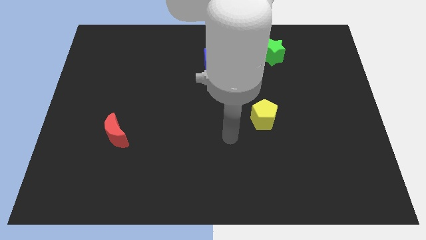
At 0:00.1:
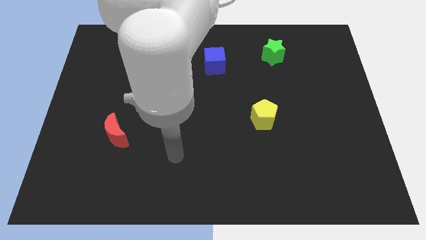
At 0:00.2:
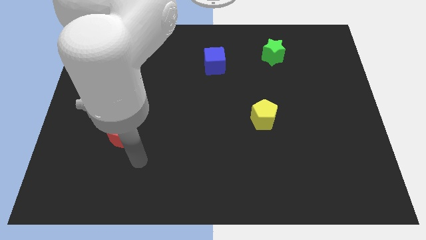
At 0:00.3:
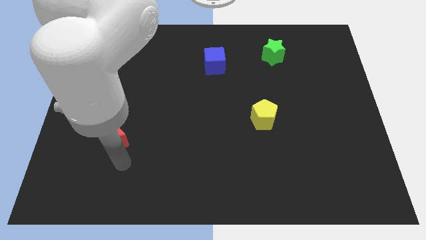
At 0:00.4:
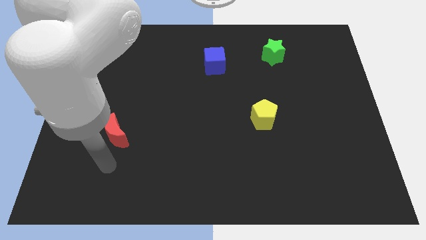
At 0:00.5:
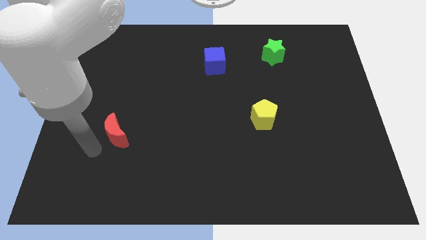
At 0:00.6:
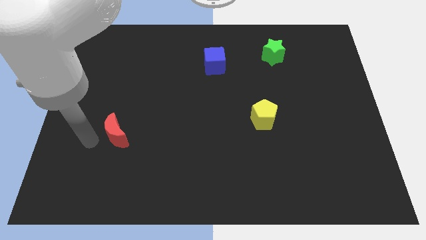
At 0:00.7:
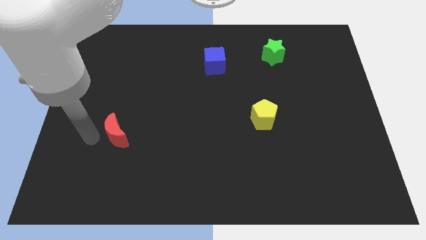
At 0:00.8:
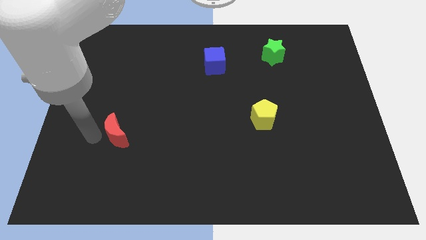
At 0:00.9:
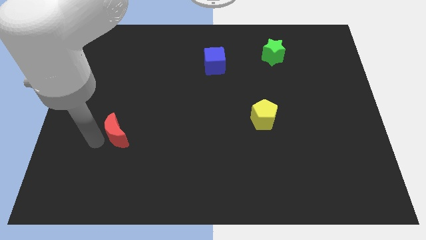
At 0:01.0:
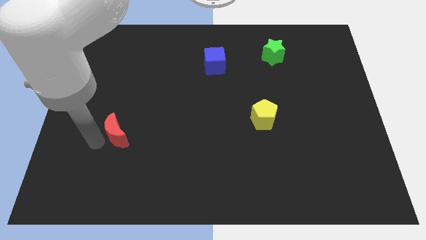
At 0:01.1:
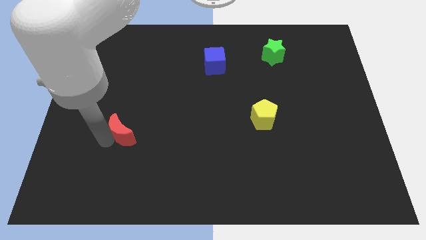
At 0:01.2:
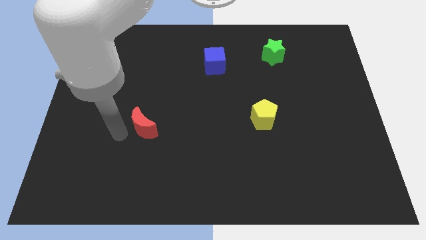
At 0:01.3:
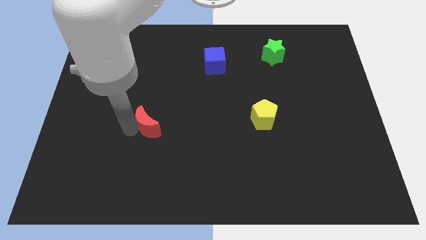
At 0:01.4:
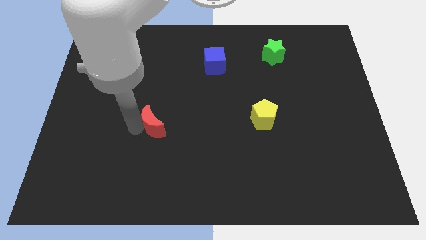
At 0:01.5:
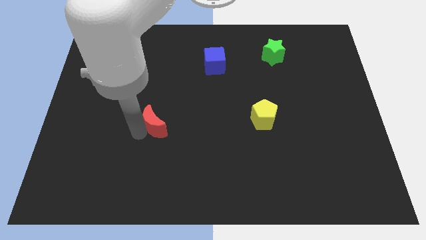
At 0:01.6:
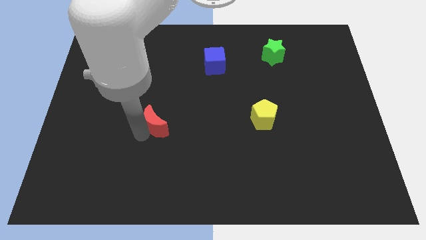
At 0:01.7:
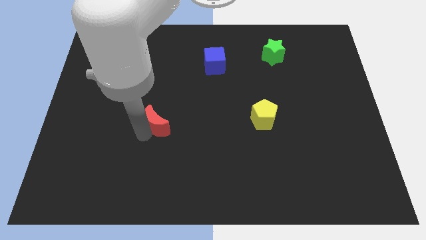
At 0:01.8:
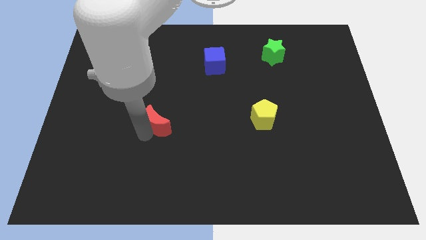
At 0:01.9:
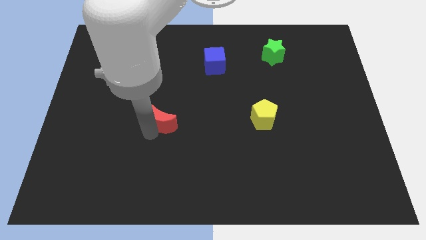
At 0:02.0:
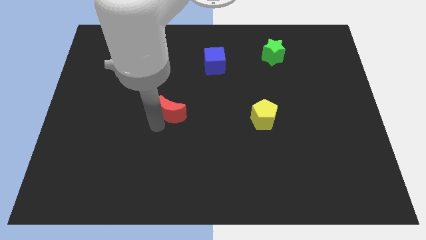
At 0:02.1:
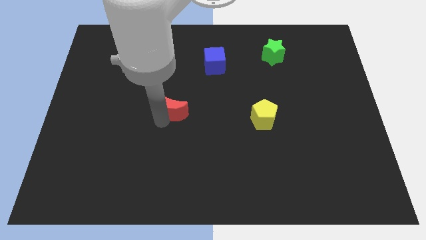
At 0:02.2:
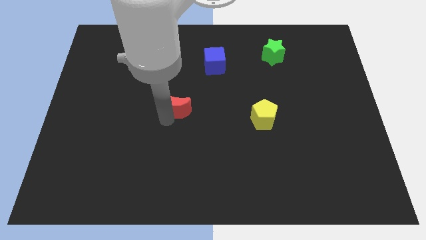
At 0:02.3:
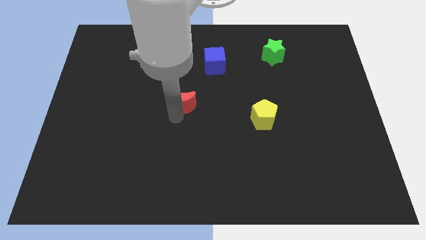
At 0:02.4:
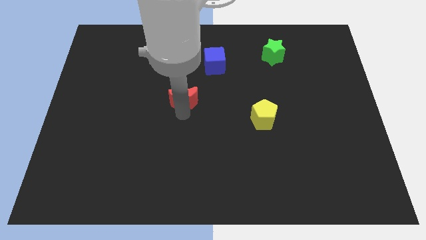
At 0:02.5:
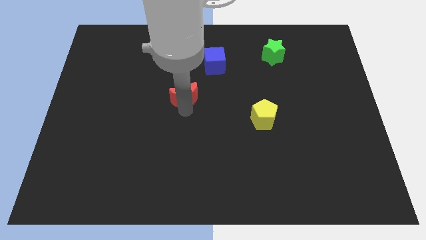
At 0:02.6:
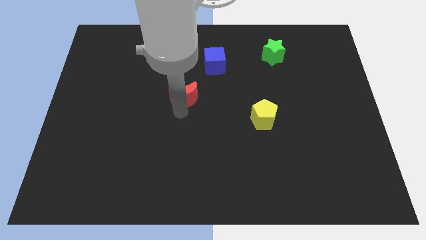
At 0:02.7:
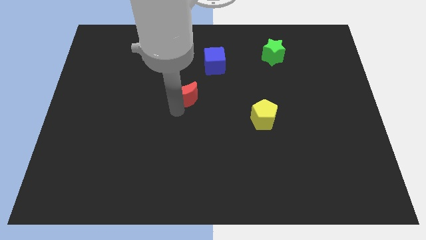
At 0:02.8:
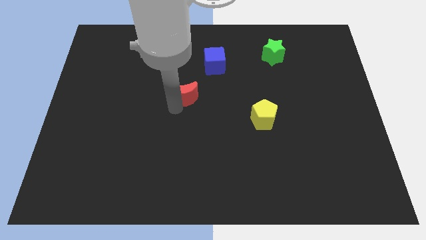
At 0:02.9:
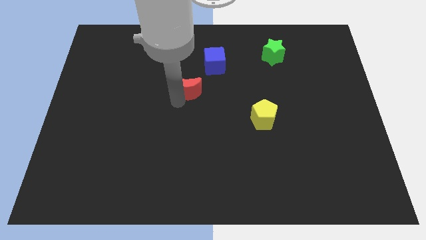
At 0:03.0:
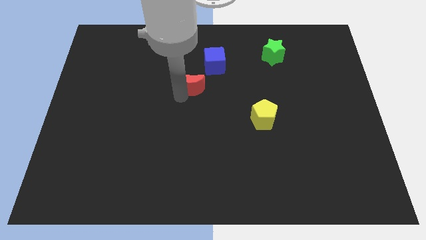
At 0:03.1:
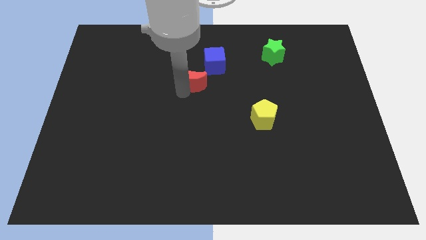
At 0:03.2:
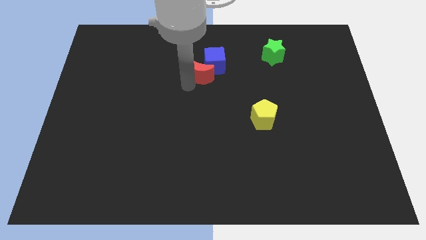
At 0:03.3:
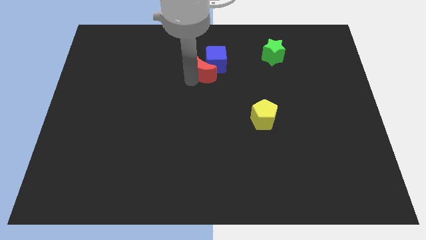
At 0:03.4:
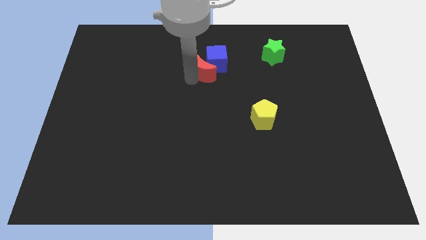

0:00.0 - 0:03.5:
put the red block to the cube

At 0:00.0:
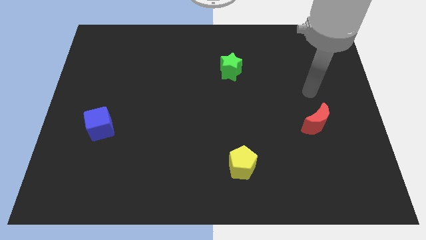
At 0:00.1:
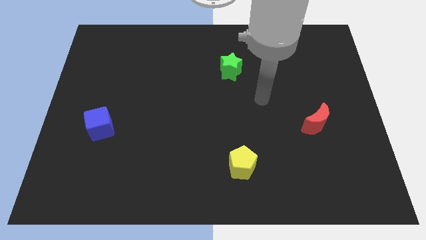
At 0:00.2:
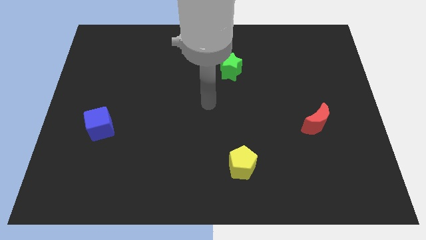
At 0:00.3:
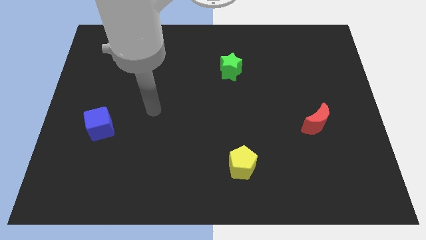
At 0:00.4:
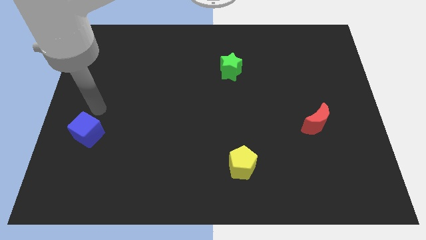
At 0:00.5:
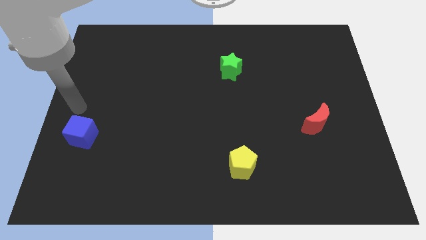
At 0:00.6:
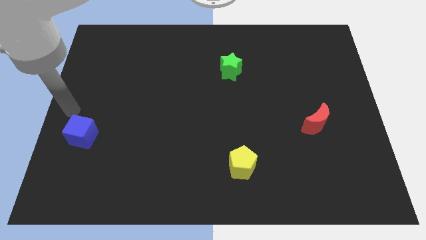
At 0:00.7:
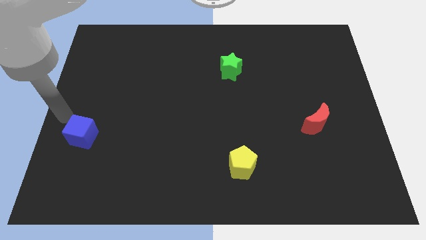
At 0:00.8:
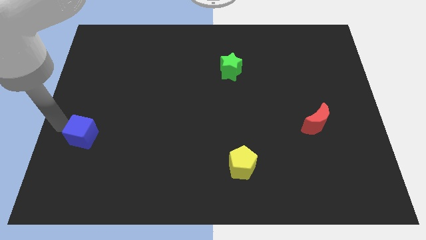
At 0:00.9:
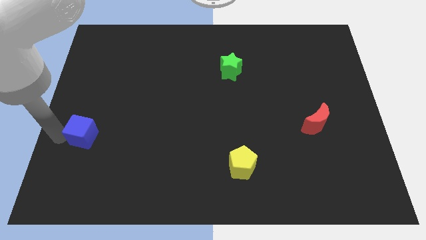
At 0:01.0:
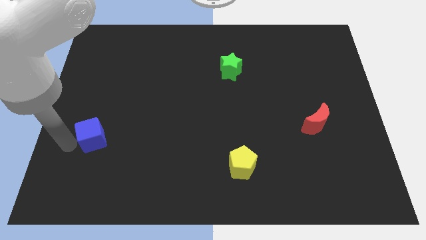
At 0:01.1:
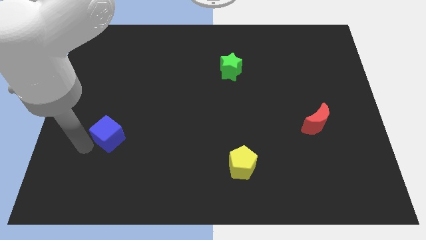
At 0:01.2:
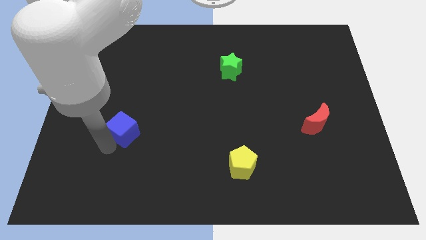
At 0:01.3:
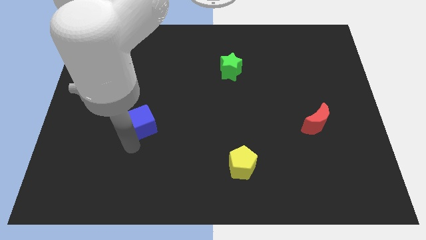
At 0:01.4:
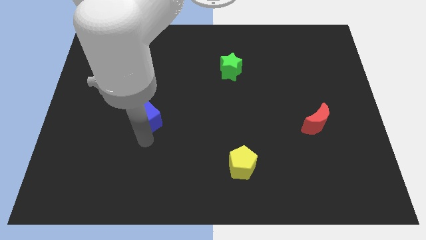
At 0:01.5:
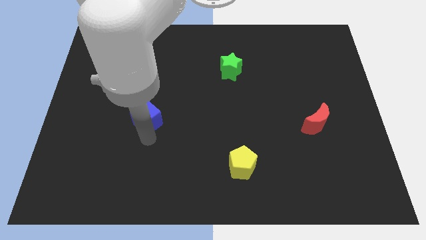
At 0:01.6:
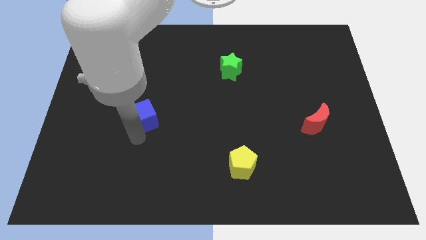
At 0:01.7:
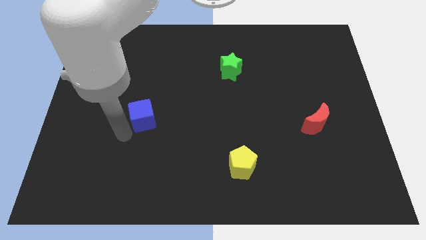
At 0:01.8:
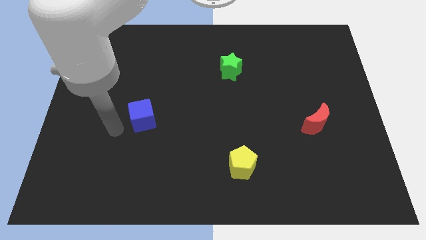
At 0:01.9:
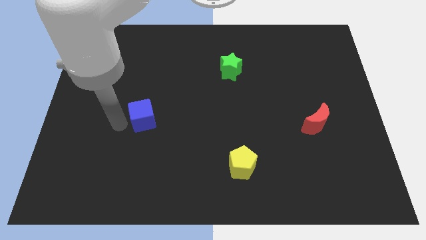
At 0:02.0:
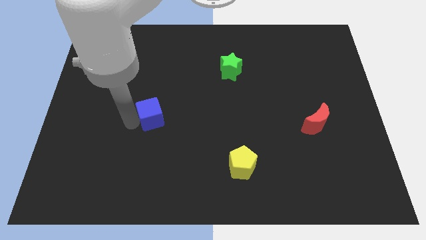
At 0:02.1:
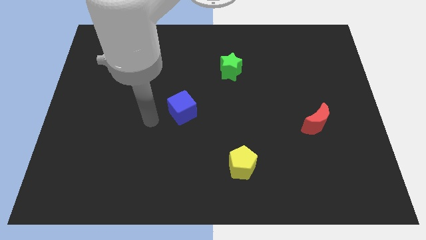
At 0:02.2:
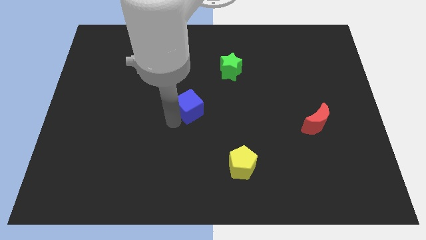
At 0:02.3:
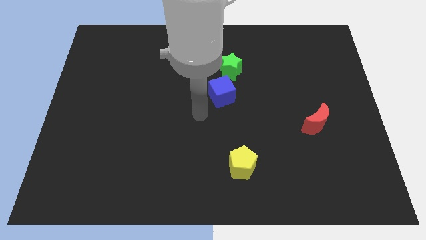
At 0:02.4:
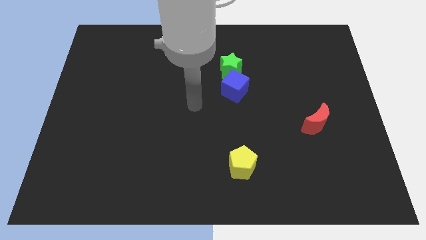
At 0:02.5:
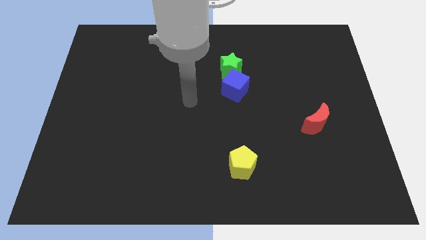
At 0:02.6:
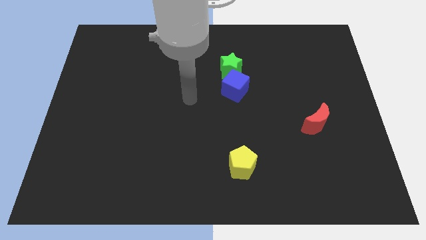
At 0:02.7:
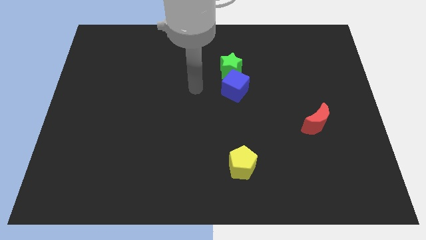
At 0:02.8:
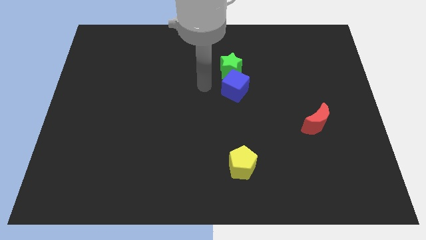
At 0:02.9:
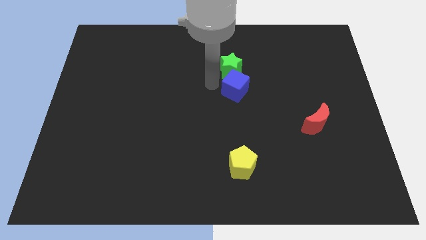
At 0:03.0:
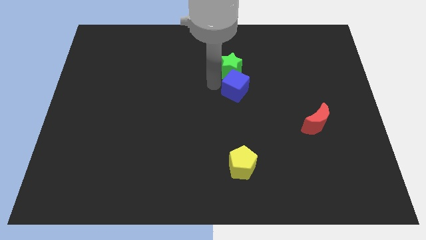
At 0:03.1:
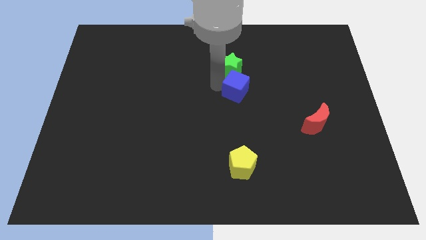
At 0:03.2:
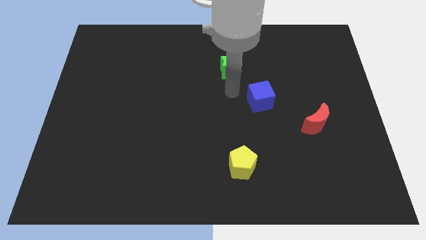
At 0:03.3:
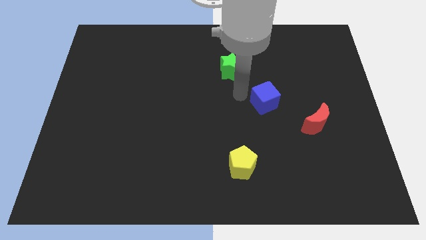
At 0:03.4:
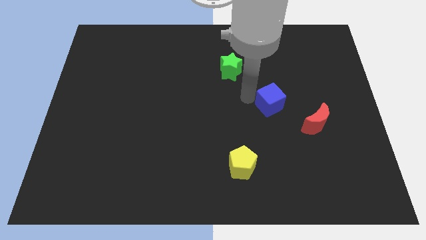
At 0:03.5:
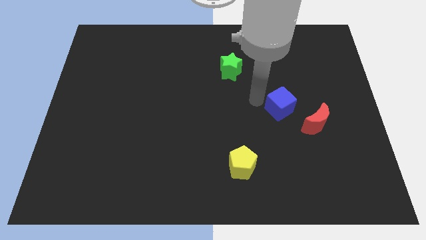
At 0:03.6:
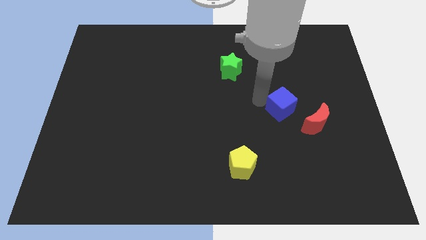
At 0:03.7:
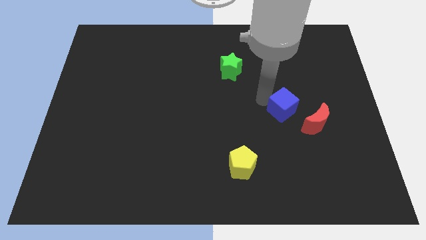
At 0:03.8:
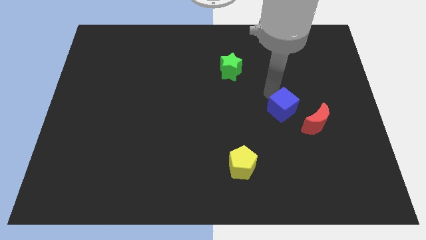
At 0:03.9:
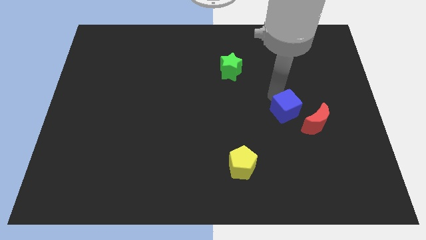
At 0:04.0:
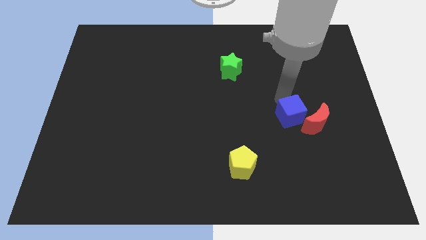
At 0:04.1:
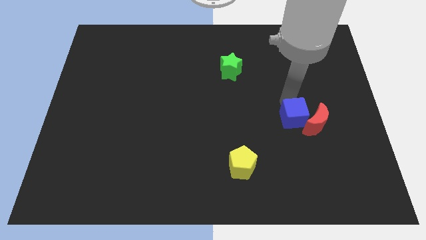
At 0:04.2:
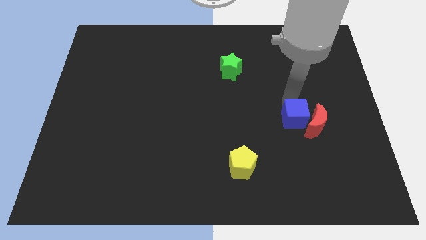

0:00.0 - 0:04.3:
put the blue block to the red block

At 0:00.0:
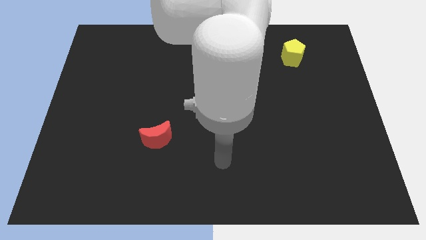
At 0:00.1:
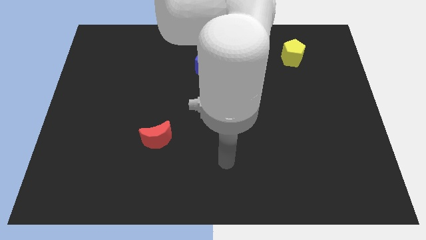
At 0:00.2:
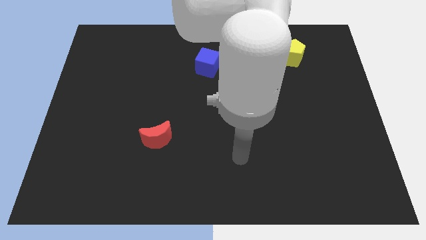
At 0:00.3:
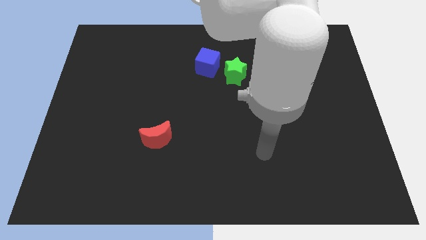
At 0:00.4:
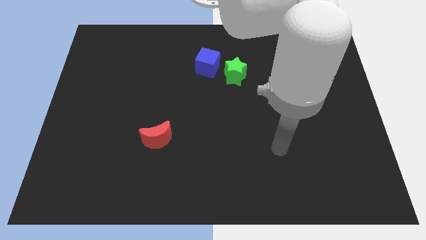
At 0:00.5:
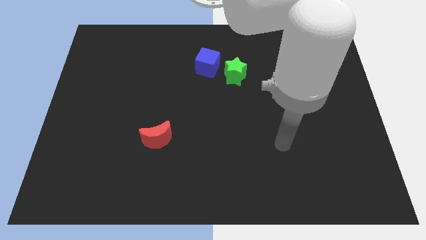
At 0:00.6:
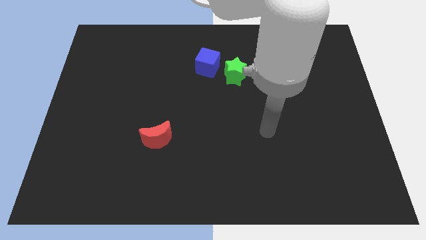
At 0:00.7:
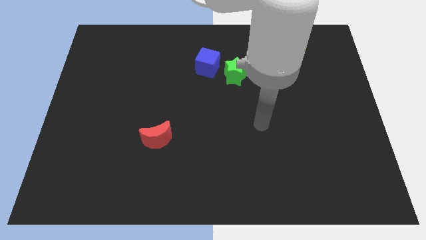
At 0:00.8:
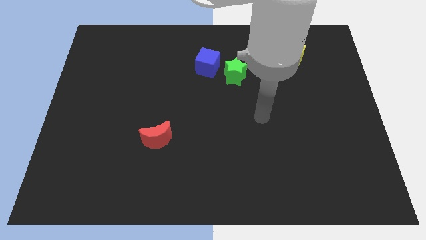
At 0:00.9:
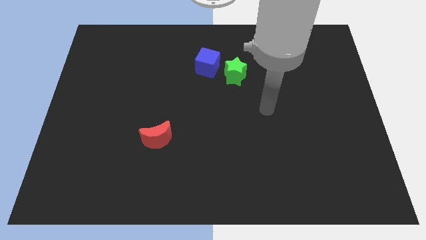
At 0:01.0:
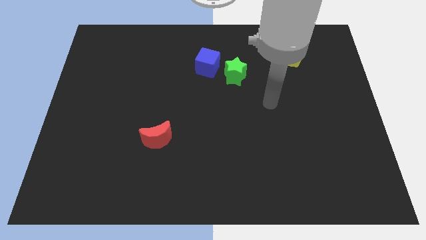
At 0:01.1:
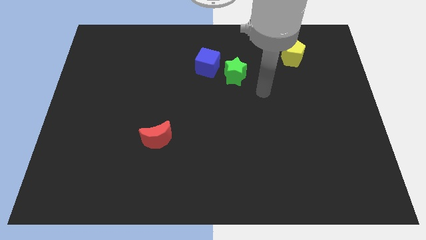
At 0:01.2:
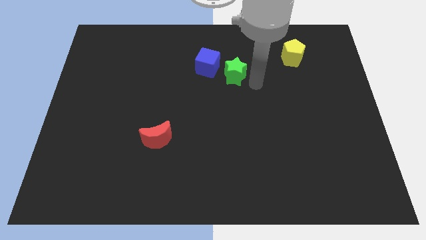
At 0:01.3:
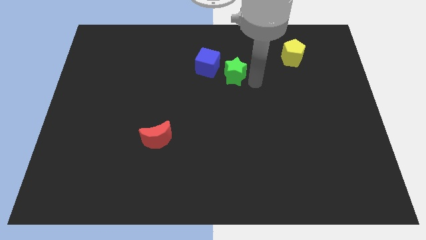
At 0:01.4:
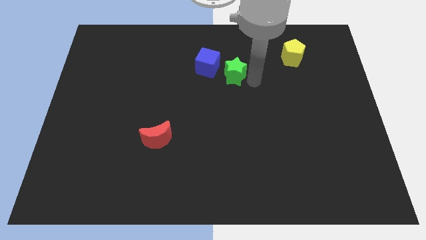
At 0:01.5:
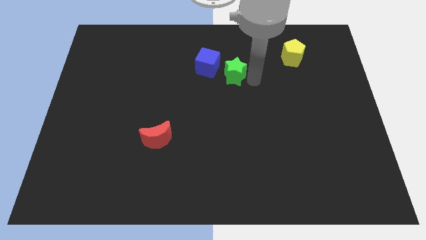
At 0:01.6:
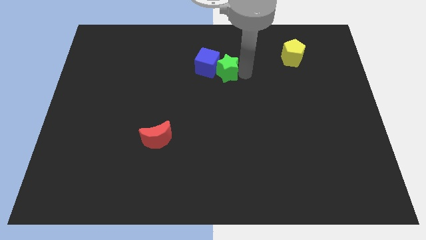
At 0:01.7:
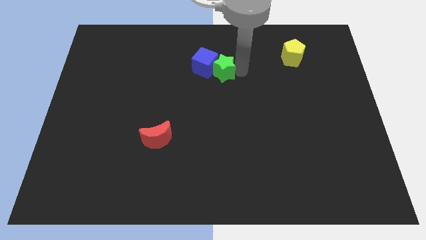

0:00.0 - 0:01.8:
put the star next to the blue block
